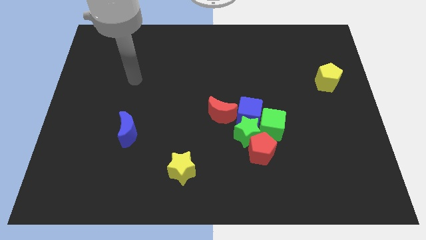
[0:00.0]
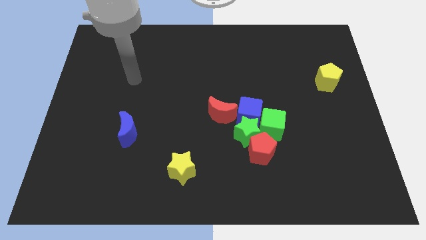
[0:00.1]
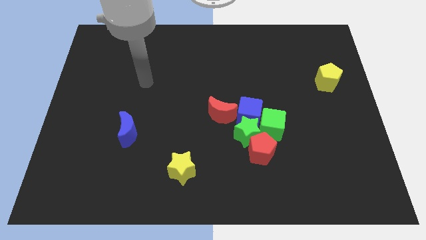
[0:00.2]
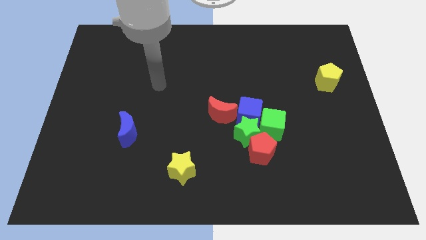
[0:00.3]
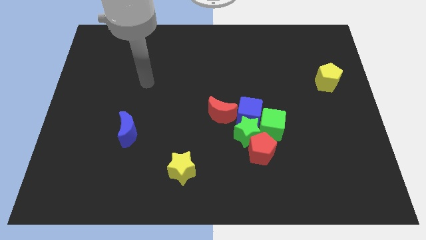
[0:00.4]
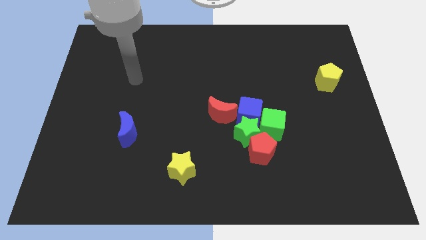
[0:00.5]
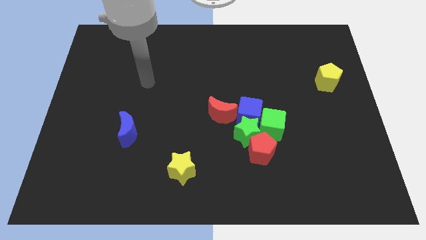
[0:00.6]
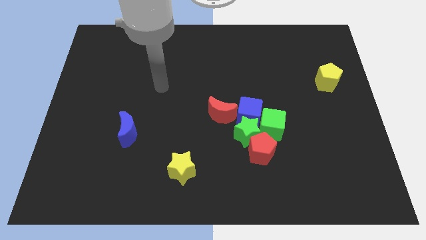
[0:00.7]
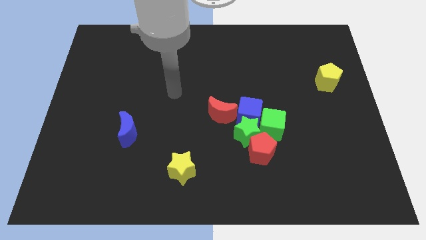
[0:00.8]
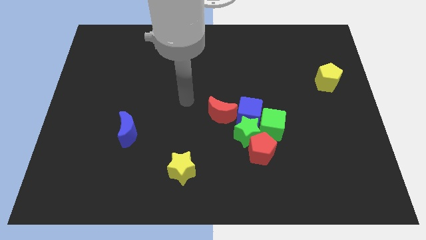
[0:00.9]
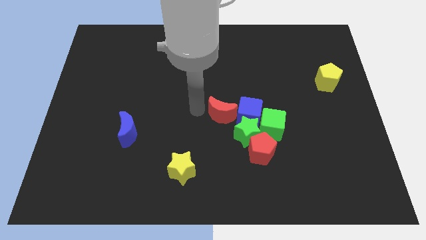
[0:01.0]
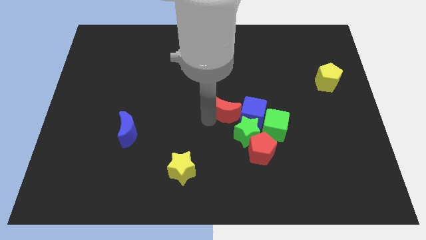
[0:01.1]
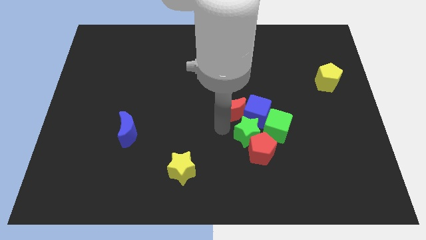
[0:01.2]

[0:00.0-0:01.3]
place the arm near the red moon

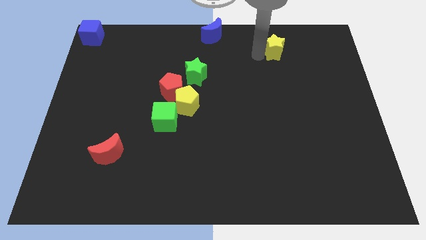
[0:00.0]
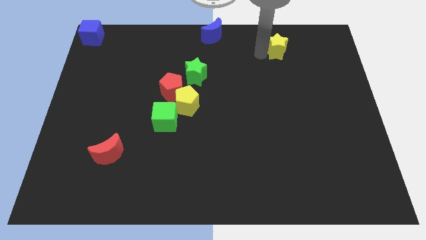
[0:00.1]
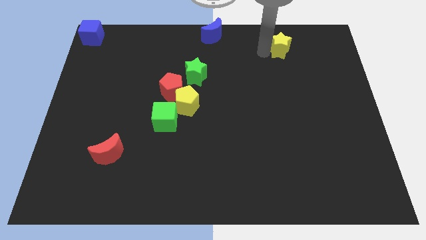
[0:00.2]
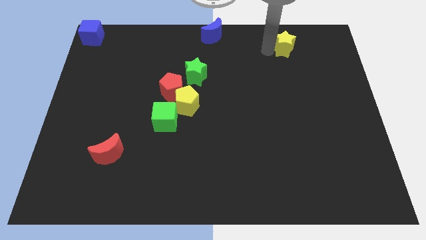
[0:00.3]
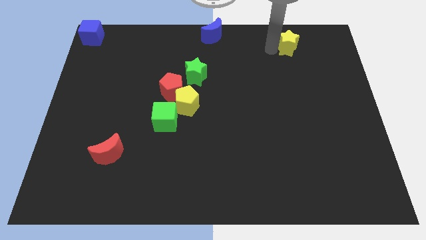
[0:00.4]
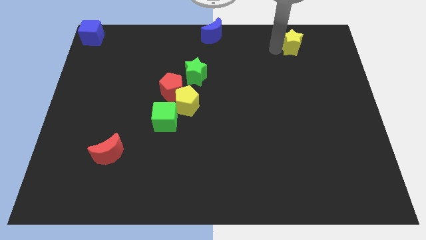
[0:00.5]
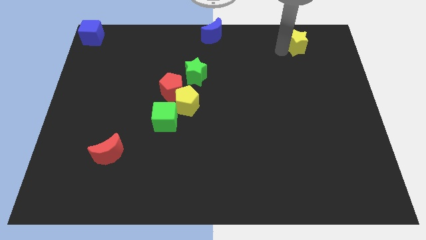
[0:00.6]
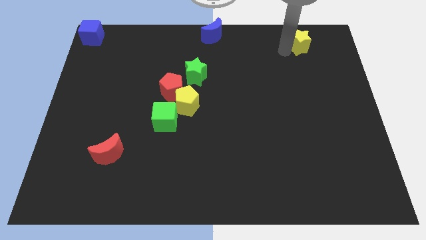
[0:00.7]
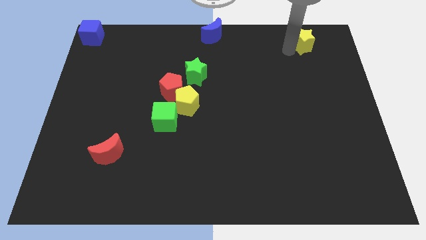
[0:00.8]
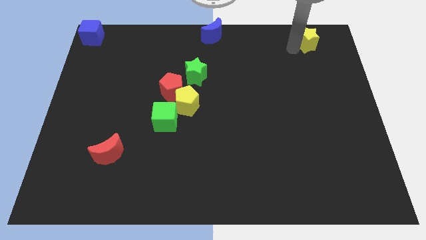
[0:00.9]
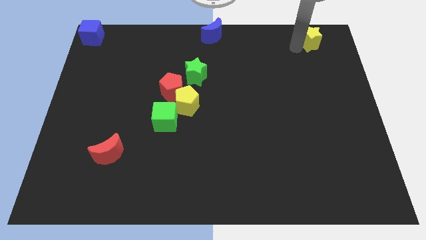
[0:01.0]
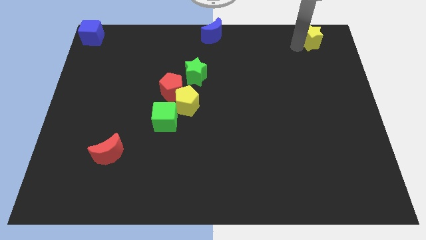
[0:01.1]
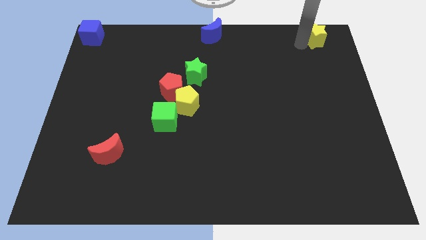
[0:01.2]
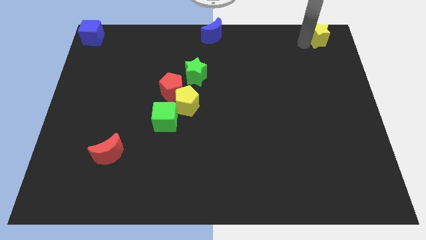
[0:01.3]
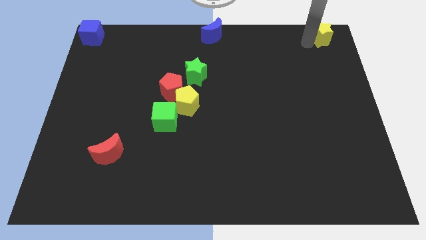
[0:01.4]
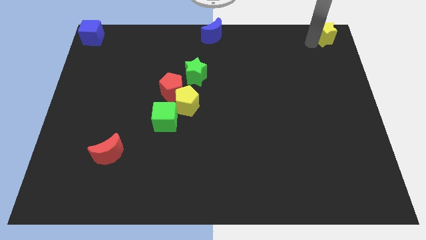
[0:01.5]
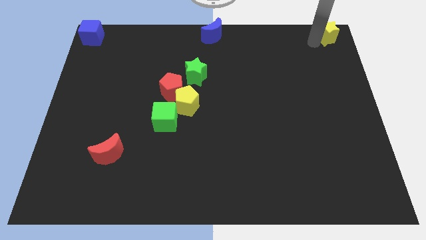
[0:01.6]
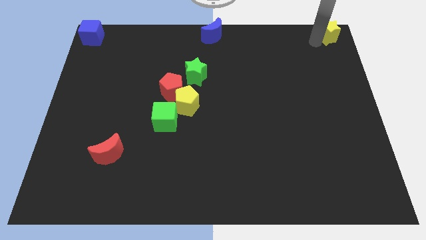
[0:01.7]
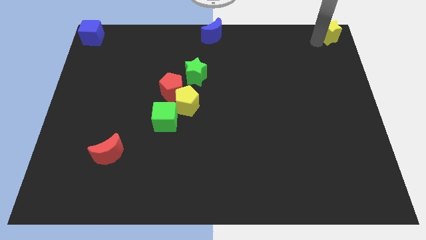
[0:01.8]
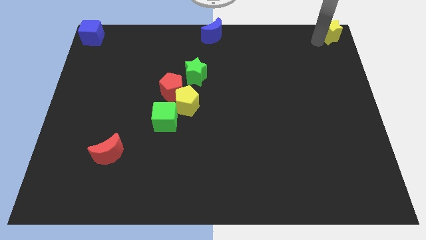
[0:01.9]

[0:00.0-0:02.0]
place a yellow star towards the top right corner of the board

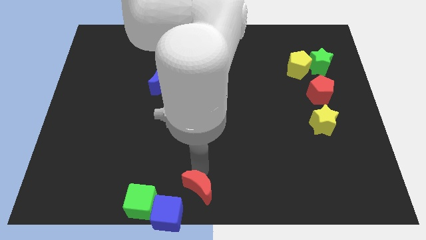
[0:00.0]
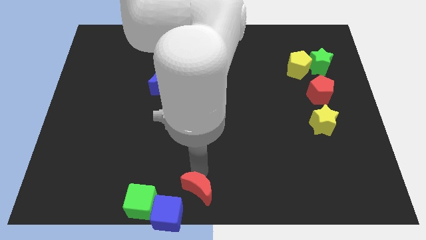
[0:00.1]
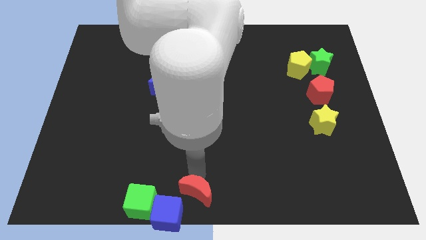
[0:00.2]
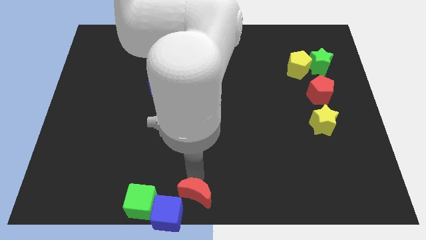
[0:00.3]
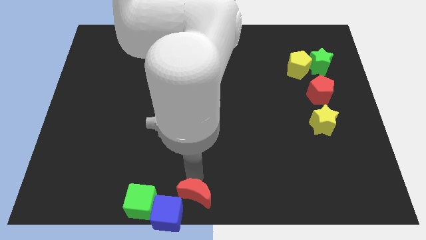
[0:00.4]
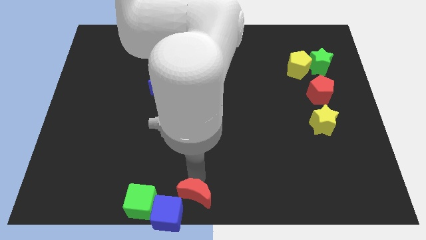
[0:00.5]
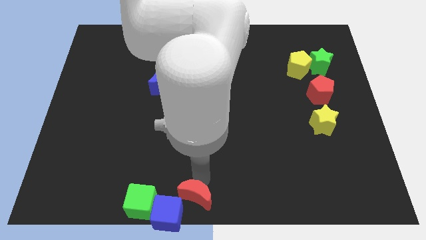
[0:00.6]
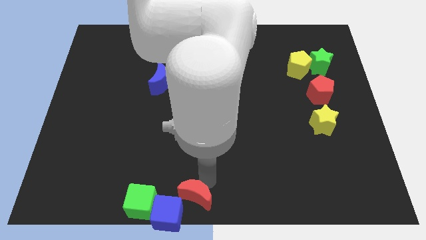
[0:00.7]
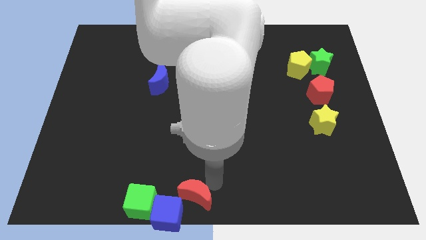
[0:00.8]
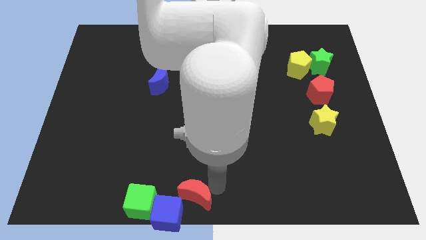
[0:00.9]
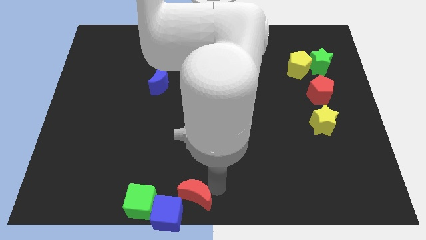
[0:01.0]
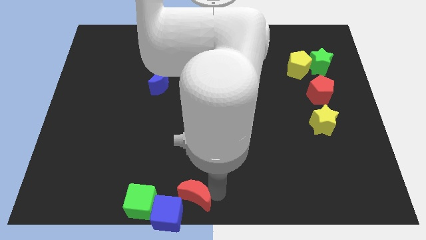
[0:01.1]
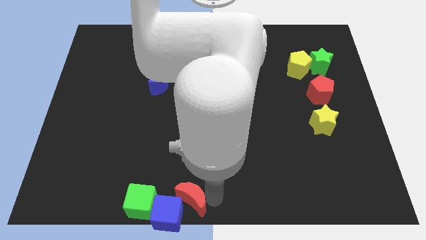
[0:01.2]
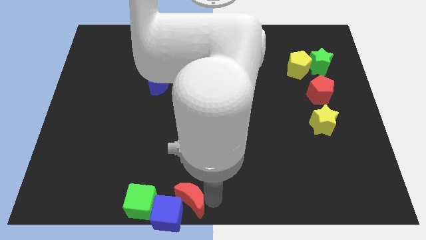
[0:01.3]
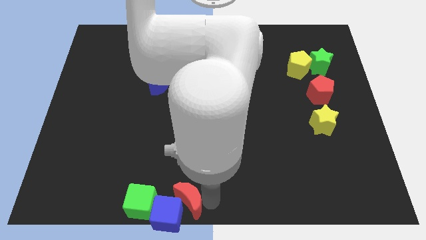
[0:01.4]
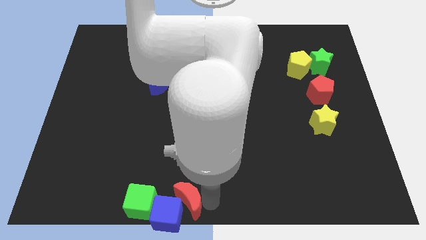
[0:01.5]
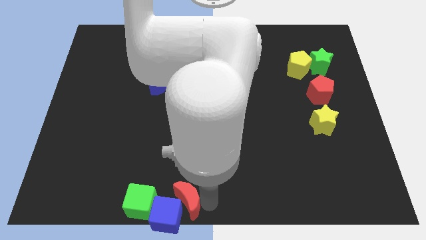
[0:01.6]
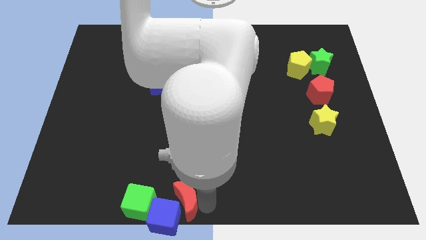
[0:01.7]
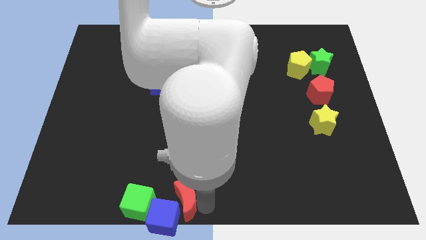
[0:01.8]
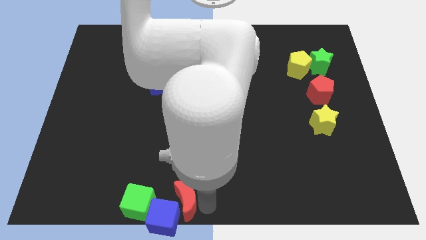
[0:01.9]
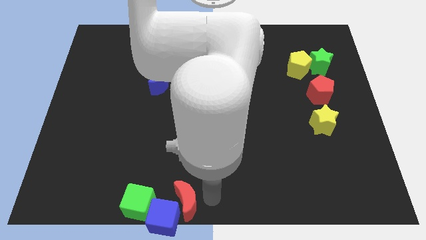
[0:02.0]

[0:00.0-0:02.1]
push the red crescent into the blue cube

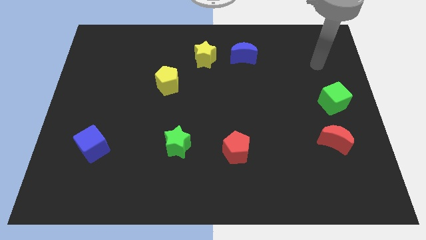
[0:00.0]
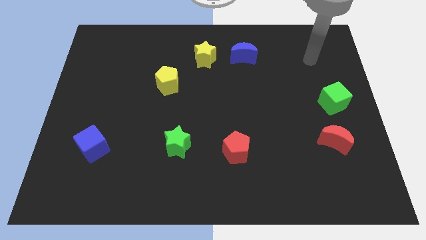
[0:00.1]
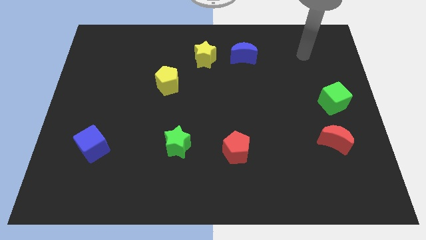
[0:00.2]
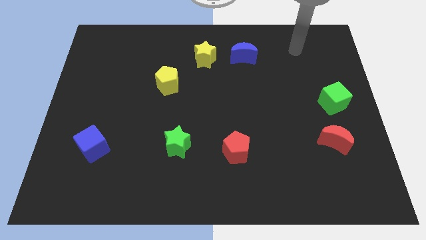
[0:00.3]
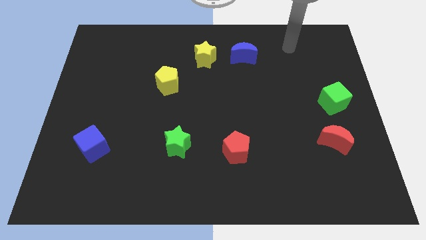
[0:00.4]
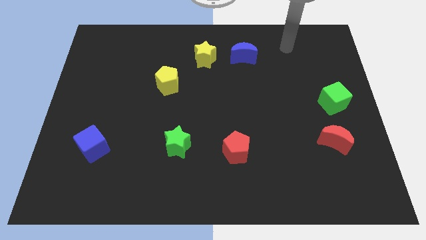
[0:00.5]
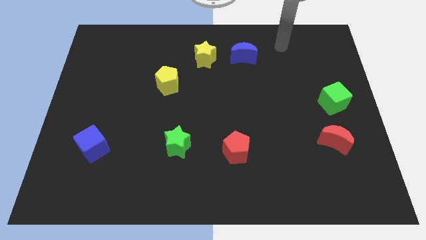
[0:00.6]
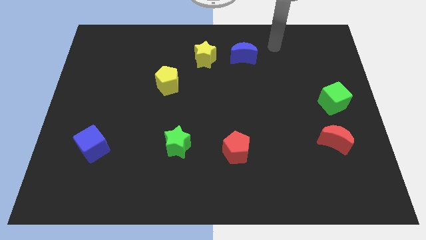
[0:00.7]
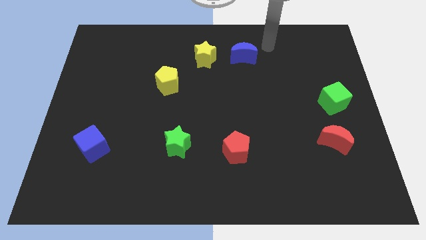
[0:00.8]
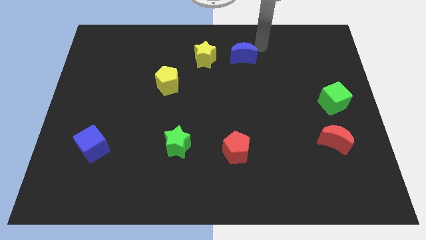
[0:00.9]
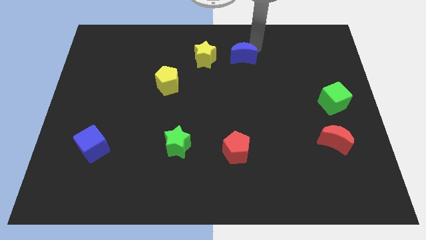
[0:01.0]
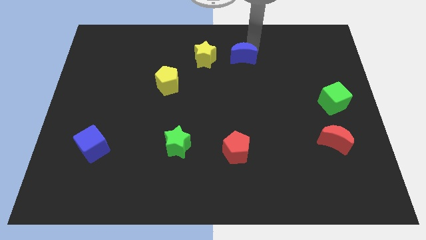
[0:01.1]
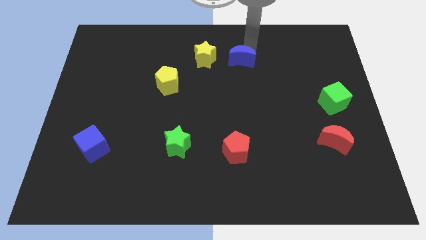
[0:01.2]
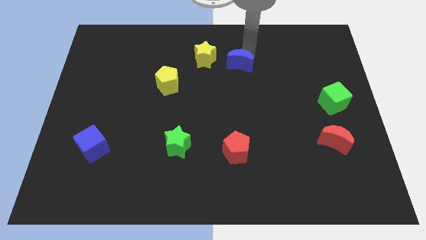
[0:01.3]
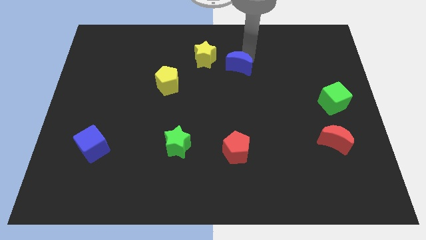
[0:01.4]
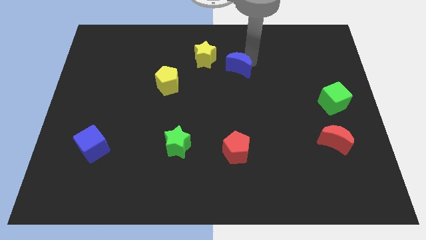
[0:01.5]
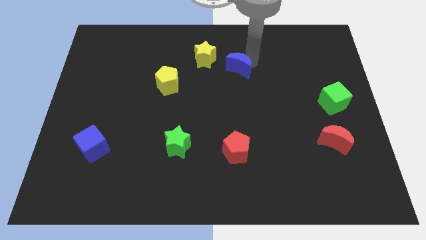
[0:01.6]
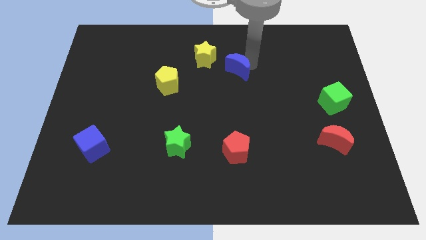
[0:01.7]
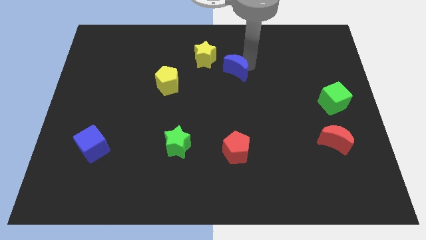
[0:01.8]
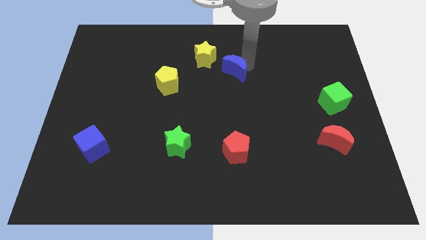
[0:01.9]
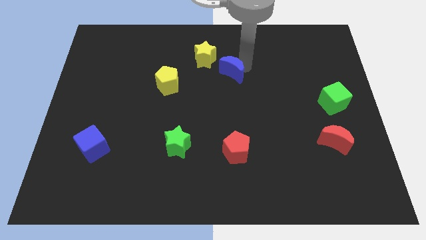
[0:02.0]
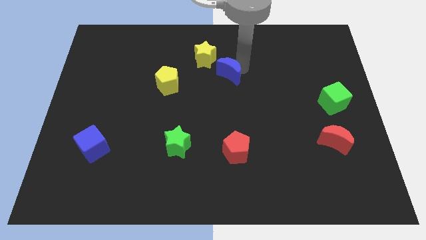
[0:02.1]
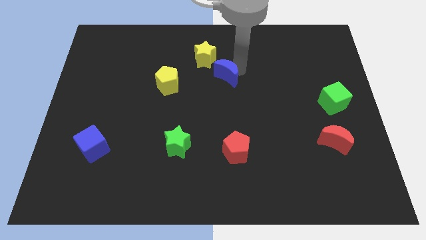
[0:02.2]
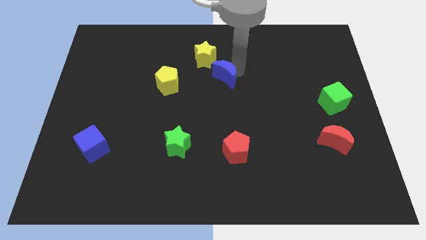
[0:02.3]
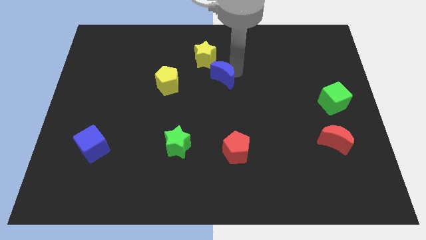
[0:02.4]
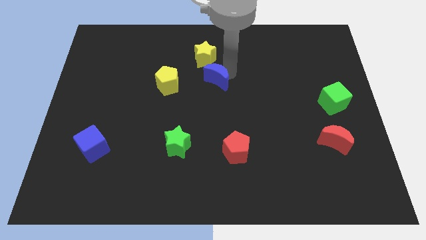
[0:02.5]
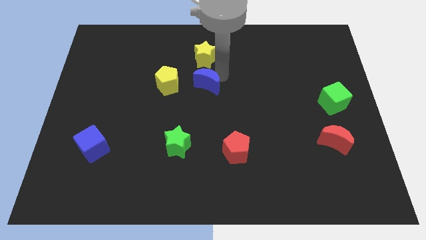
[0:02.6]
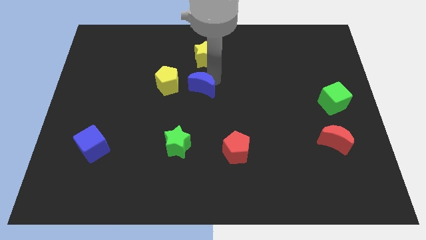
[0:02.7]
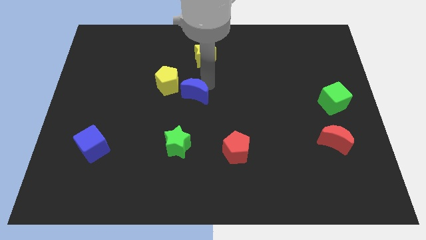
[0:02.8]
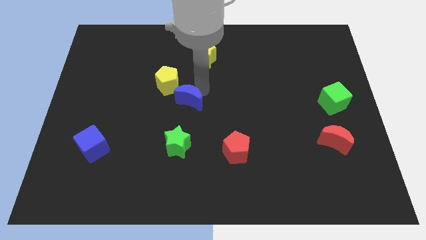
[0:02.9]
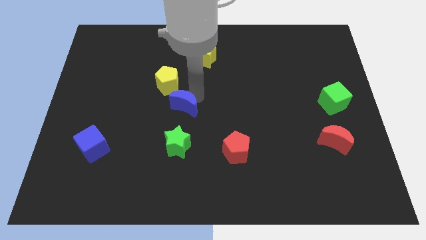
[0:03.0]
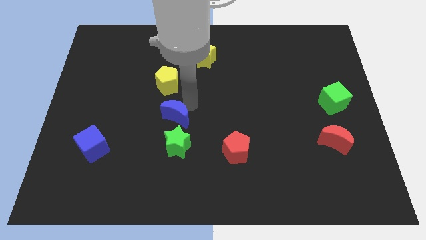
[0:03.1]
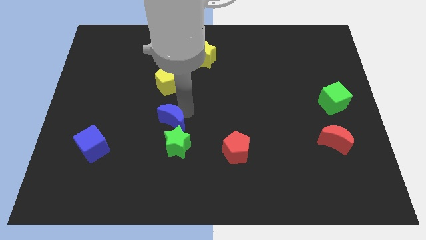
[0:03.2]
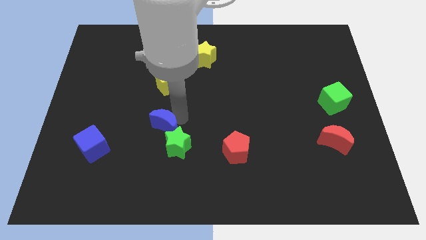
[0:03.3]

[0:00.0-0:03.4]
move the blue moon to the bottom side of the yellow pentagon

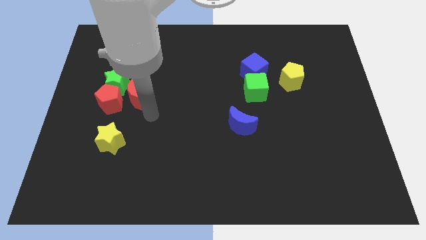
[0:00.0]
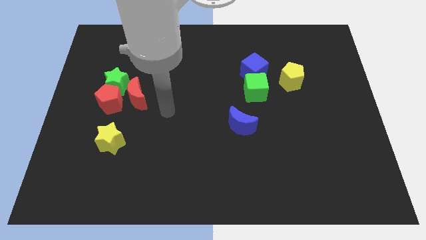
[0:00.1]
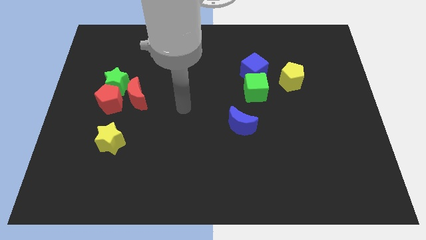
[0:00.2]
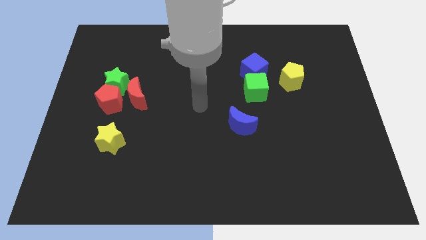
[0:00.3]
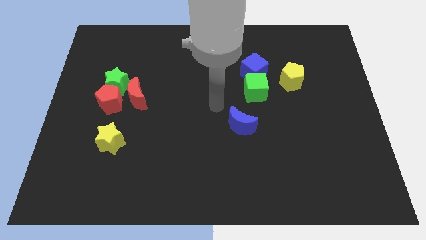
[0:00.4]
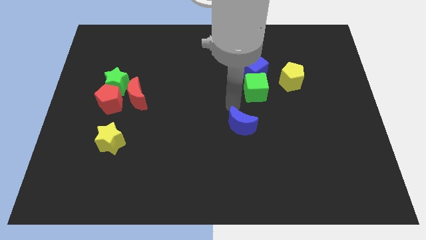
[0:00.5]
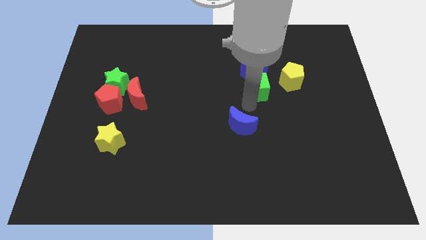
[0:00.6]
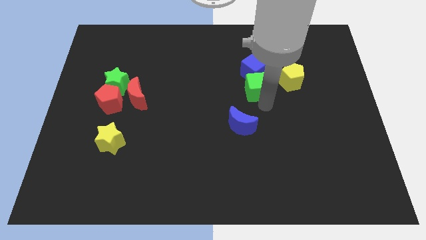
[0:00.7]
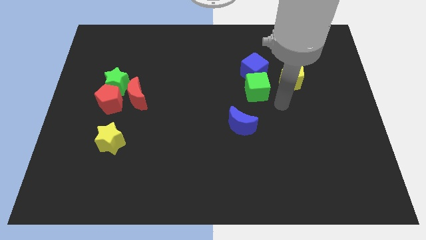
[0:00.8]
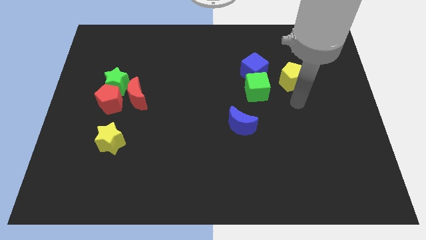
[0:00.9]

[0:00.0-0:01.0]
point your arm below the yellow pentagon
